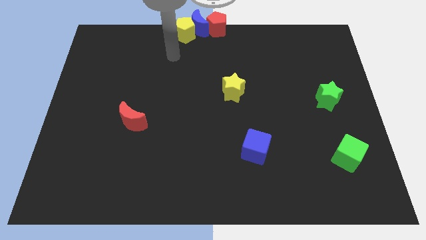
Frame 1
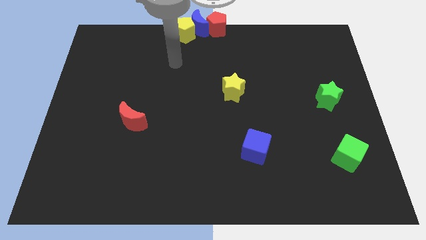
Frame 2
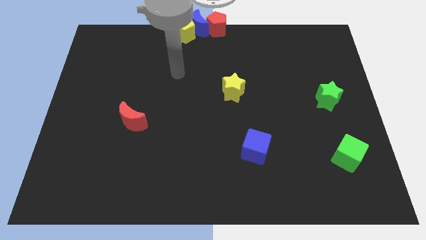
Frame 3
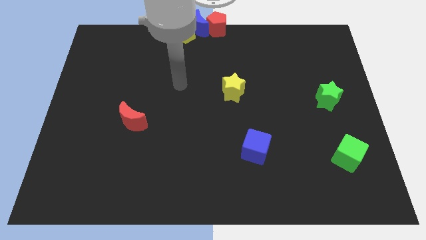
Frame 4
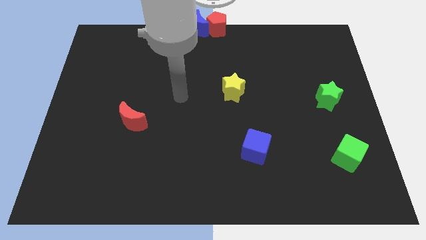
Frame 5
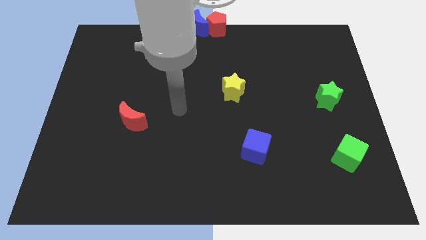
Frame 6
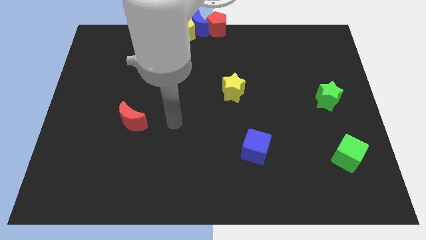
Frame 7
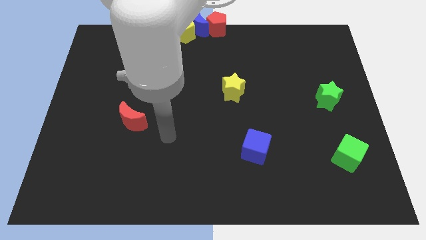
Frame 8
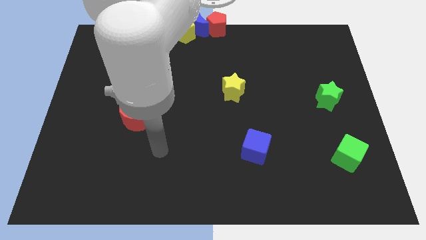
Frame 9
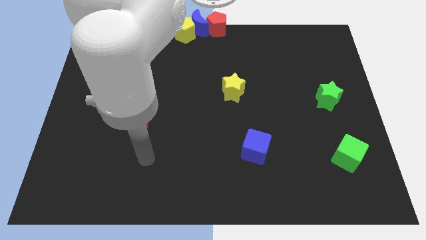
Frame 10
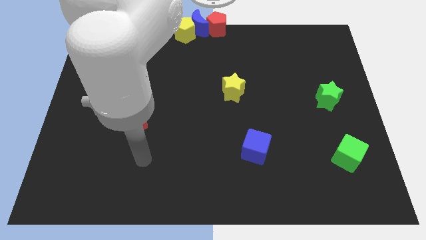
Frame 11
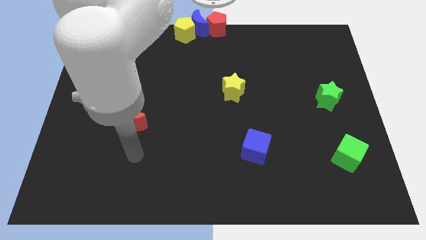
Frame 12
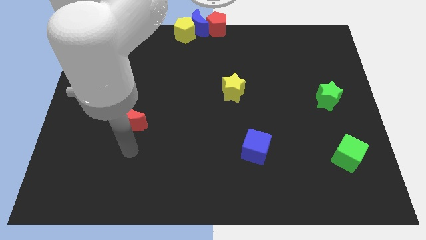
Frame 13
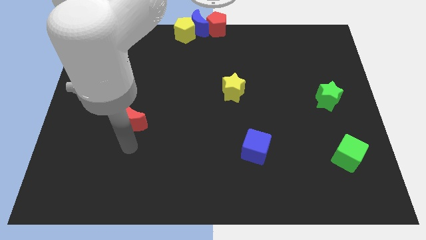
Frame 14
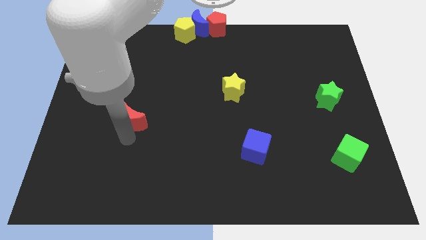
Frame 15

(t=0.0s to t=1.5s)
point your arm at the bottom side of the red crescent

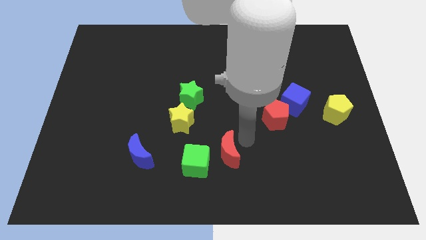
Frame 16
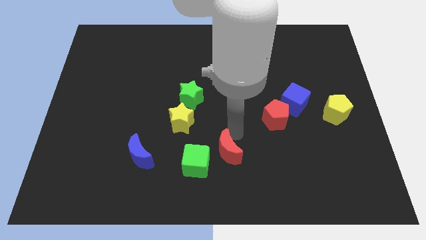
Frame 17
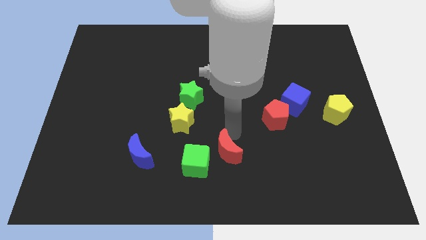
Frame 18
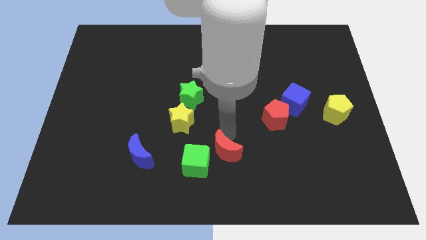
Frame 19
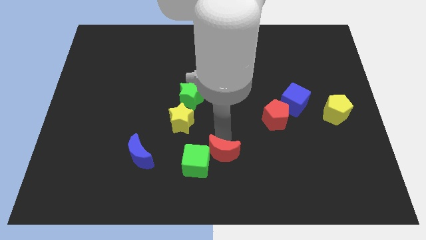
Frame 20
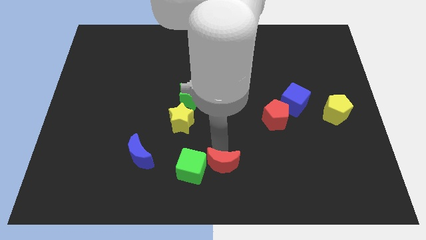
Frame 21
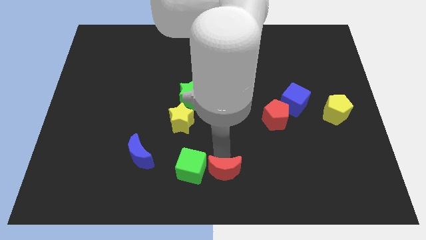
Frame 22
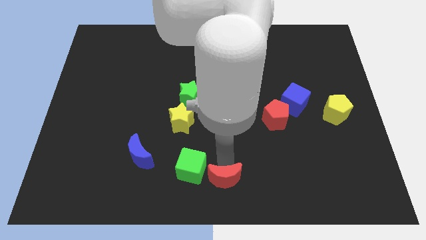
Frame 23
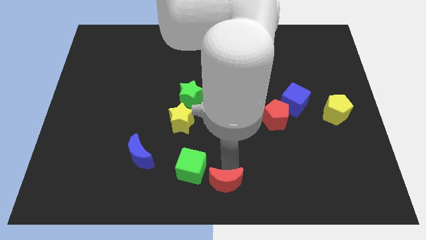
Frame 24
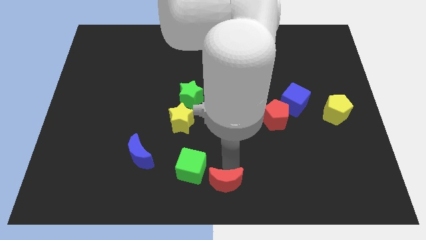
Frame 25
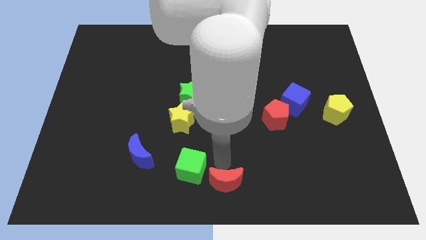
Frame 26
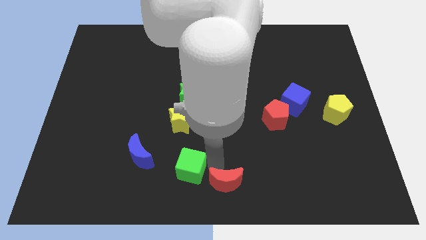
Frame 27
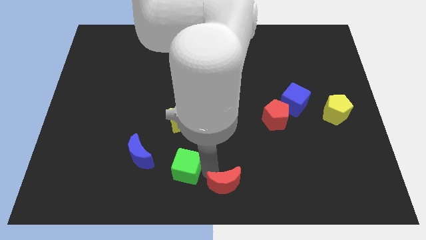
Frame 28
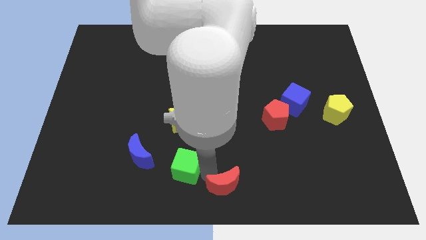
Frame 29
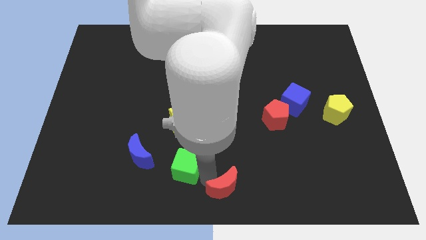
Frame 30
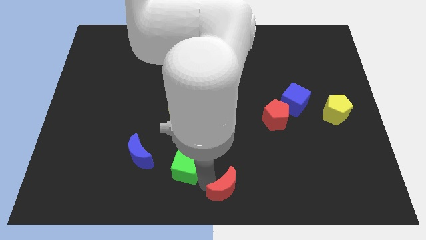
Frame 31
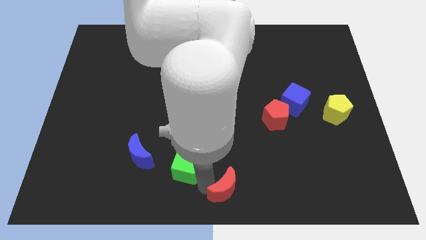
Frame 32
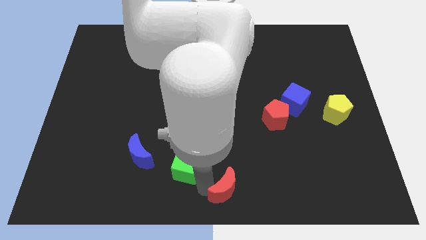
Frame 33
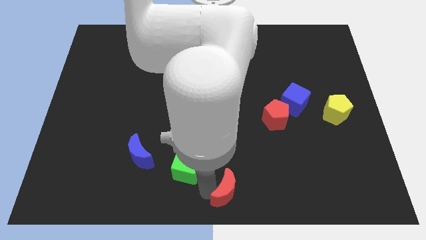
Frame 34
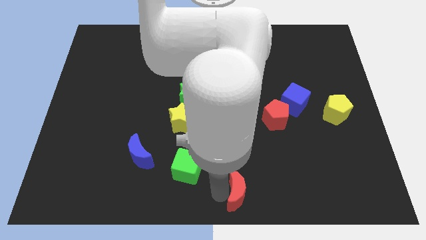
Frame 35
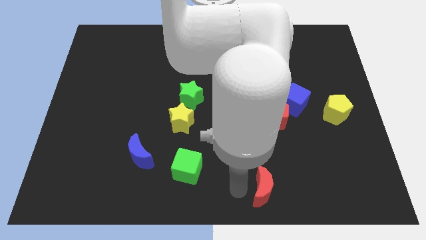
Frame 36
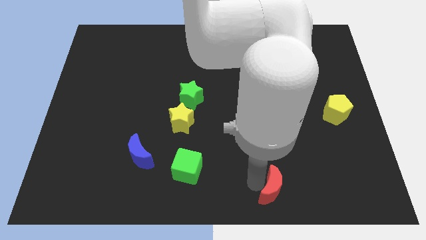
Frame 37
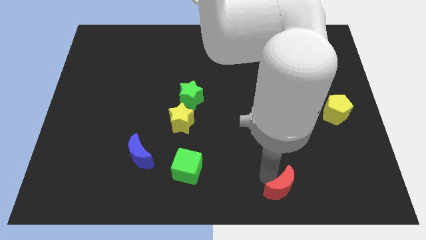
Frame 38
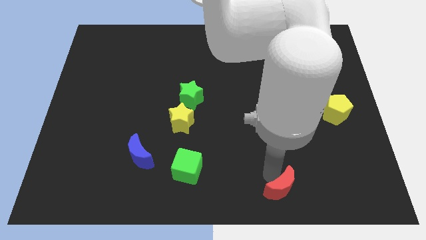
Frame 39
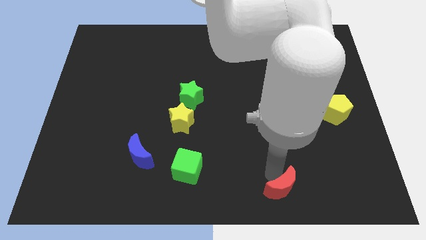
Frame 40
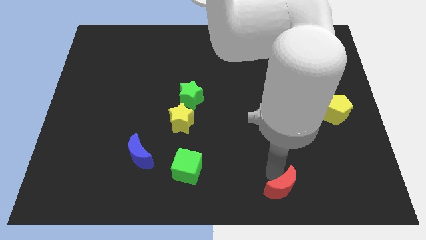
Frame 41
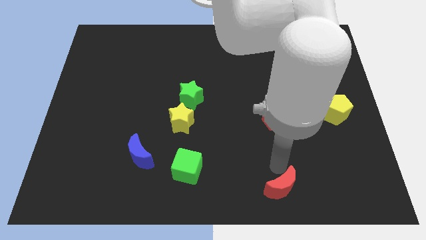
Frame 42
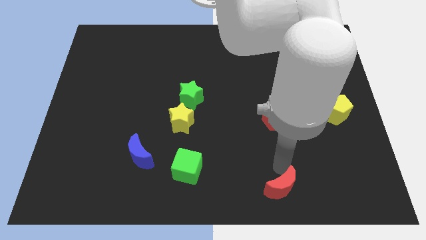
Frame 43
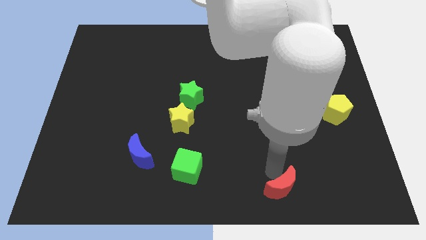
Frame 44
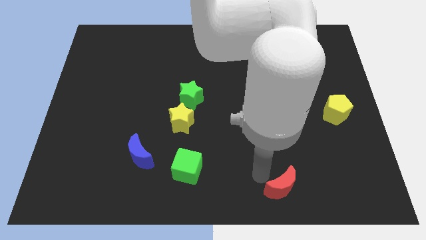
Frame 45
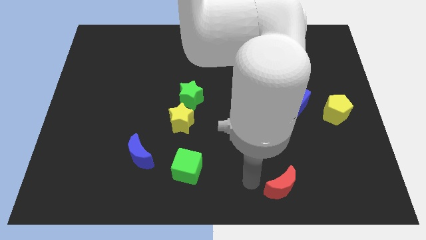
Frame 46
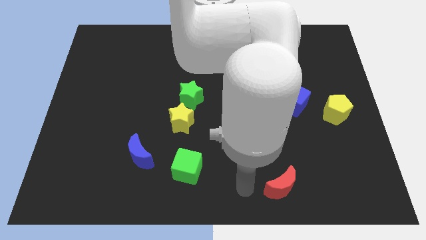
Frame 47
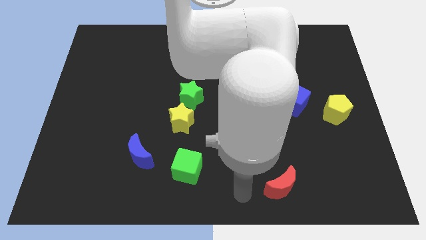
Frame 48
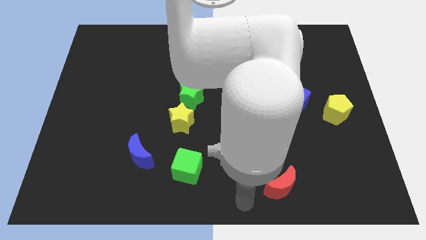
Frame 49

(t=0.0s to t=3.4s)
place the red crescent vertically below the red pentagon

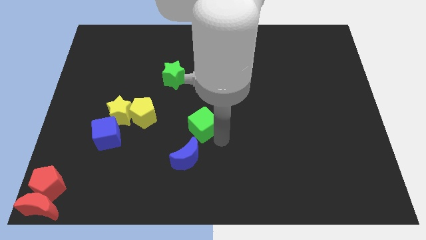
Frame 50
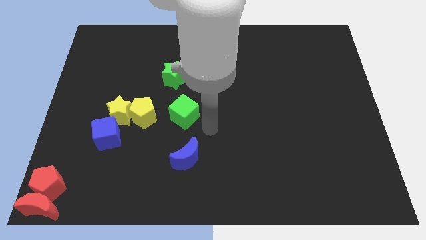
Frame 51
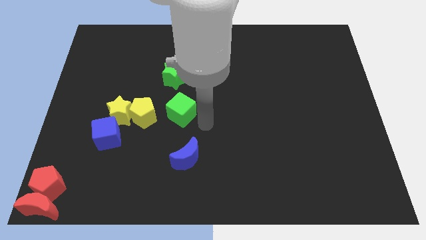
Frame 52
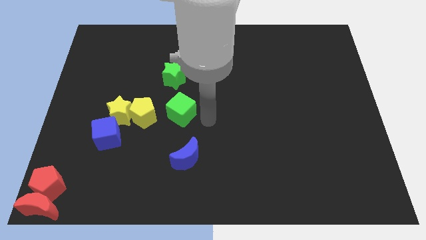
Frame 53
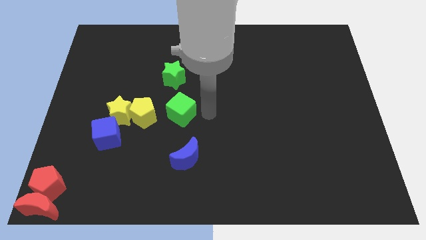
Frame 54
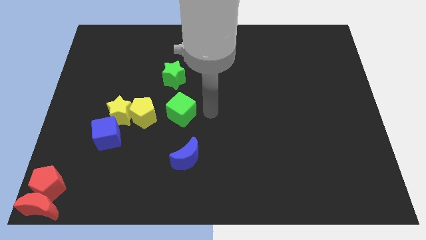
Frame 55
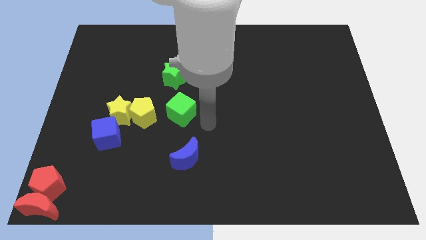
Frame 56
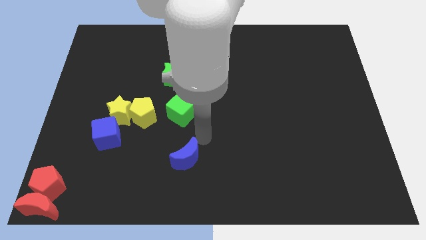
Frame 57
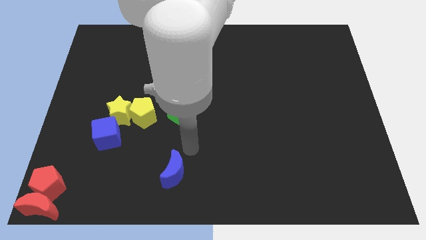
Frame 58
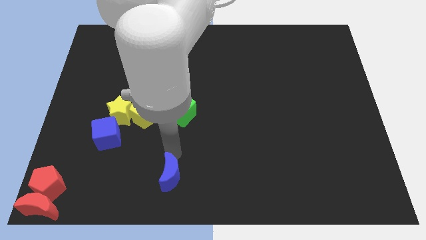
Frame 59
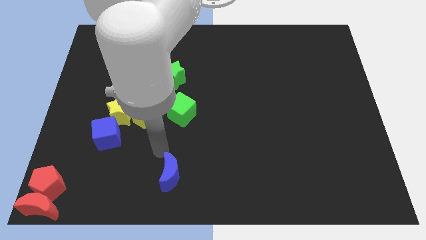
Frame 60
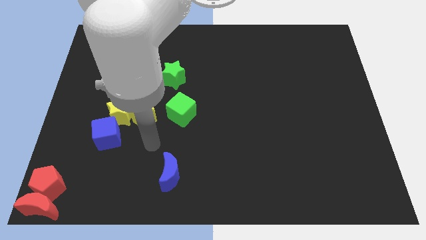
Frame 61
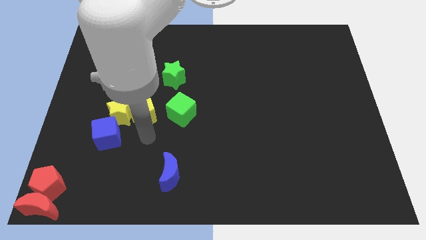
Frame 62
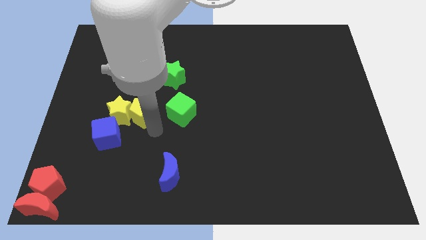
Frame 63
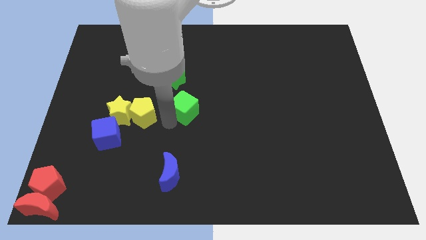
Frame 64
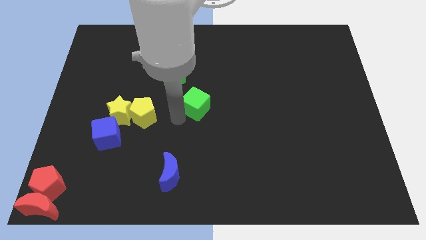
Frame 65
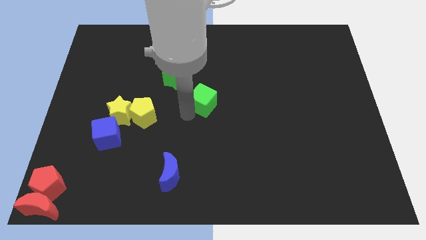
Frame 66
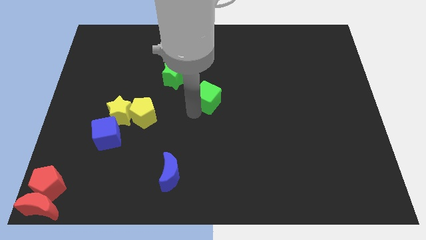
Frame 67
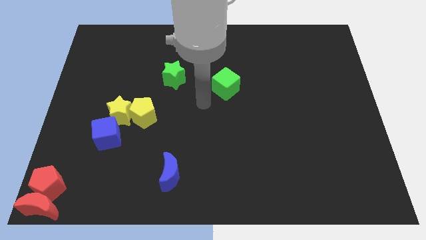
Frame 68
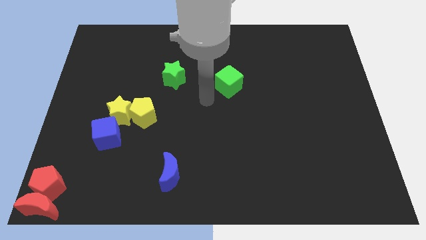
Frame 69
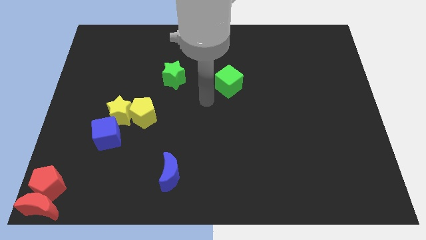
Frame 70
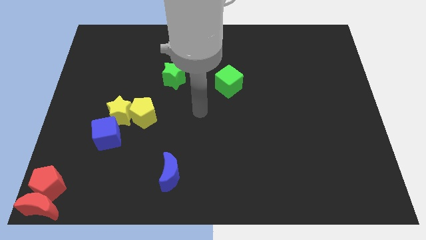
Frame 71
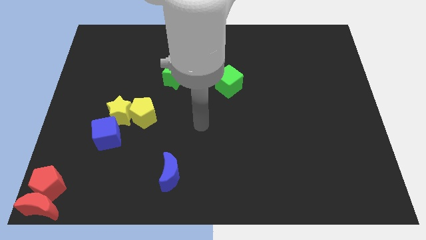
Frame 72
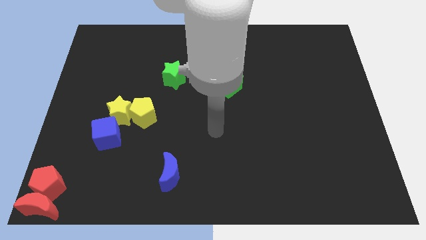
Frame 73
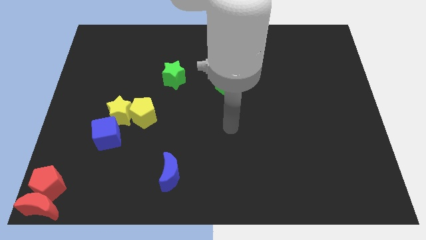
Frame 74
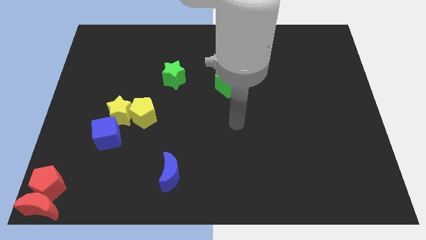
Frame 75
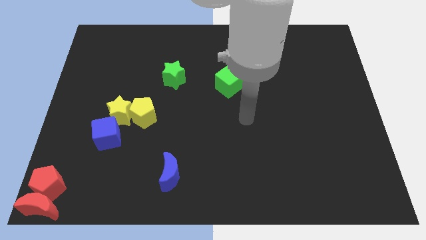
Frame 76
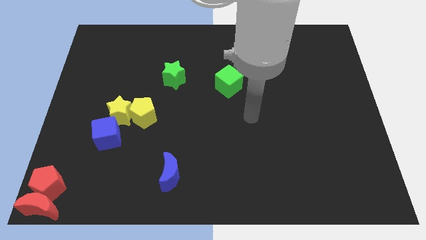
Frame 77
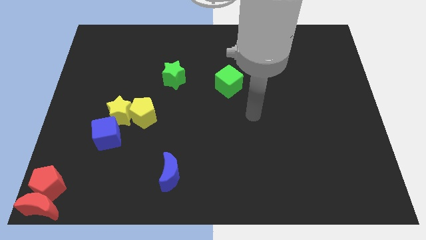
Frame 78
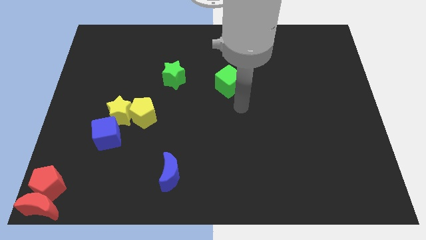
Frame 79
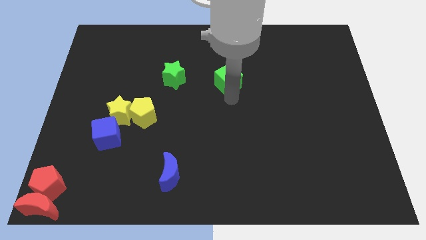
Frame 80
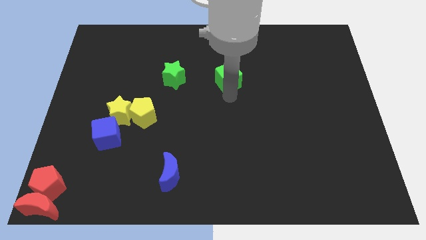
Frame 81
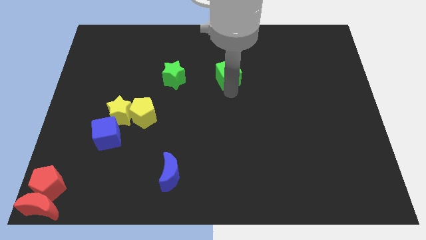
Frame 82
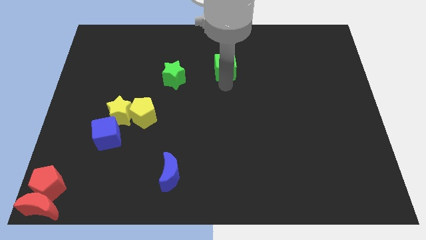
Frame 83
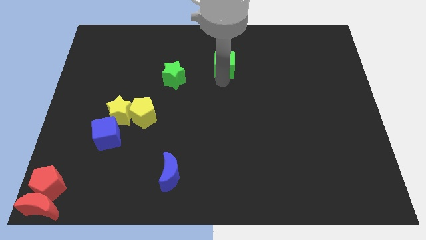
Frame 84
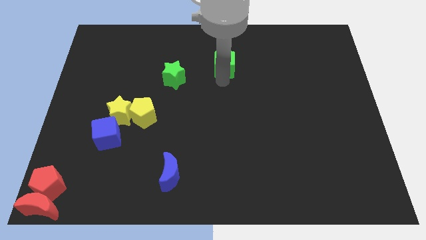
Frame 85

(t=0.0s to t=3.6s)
place the green cube to the right of the green star

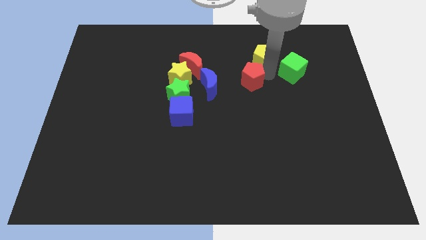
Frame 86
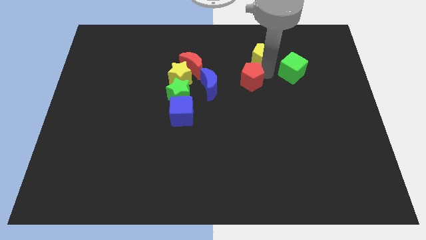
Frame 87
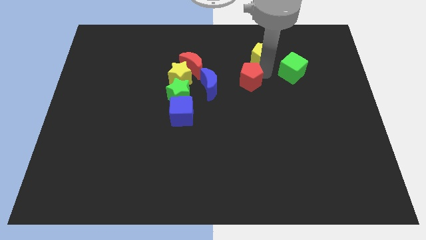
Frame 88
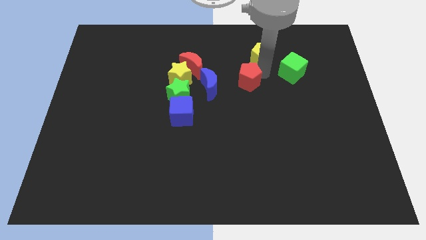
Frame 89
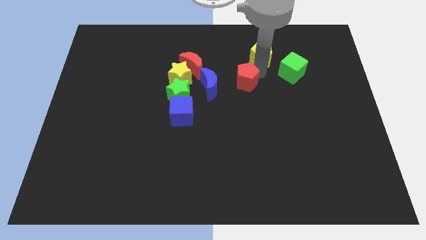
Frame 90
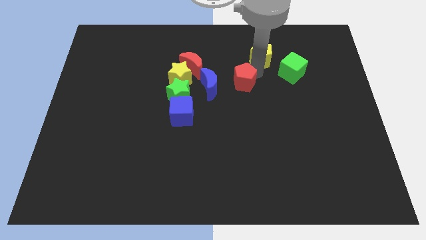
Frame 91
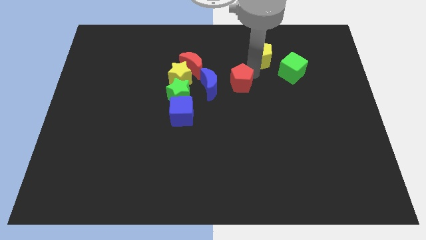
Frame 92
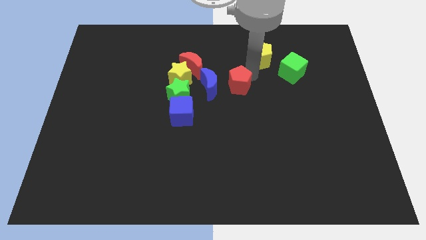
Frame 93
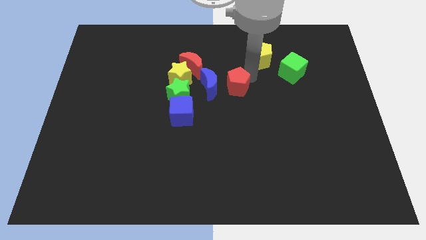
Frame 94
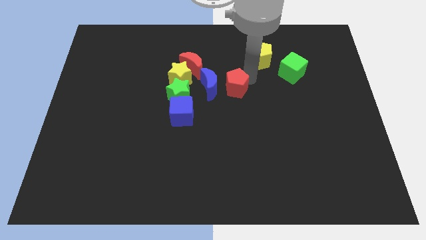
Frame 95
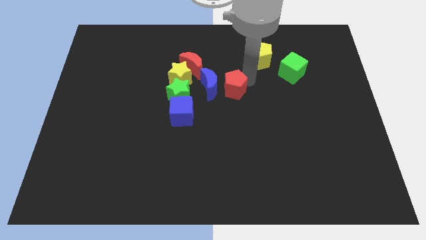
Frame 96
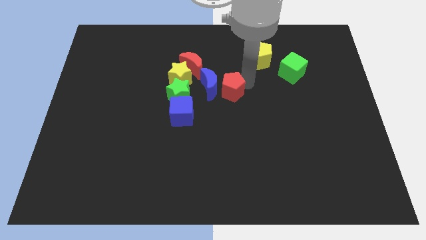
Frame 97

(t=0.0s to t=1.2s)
separate the red pentagon and yellow pentagon
